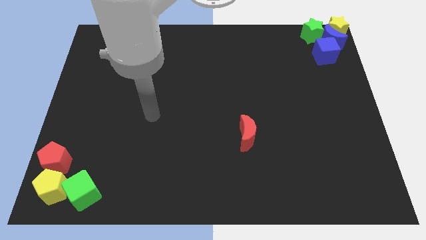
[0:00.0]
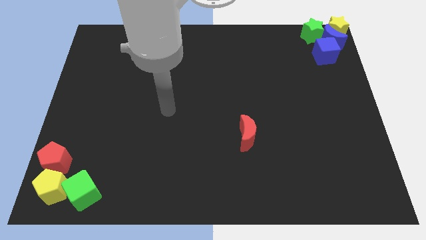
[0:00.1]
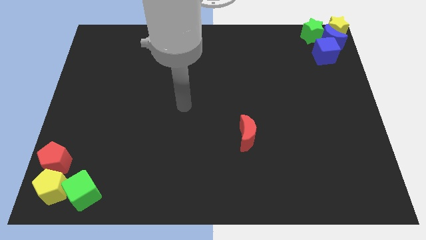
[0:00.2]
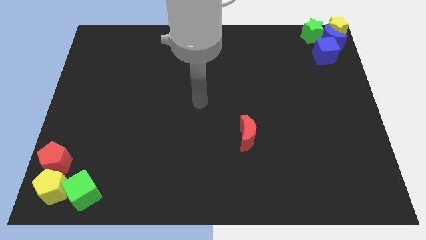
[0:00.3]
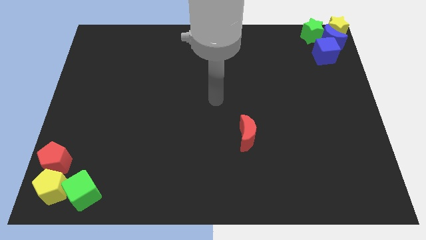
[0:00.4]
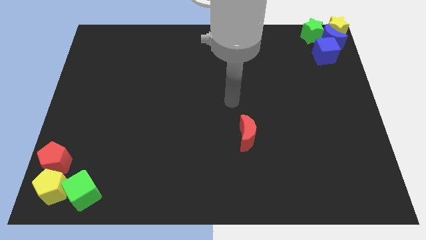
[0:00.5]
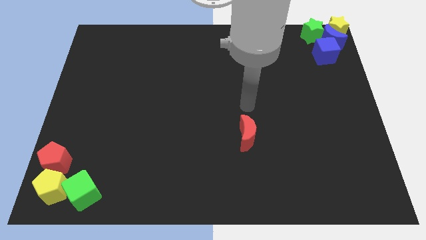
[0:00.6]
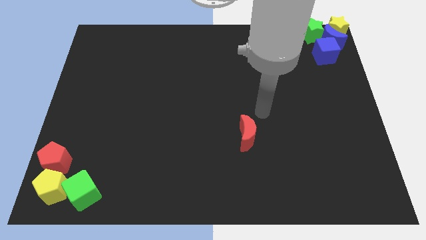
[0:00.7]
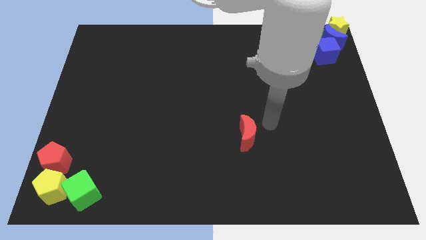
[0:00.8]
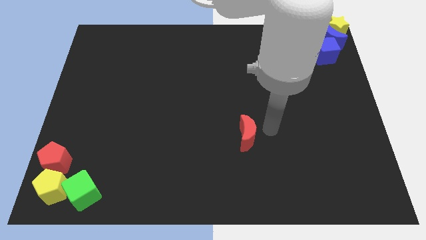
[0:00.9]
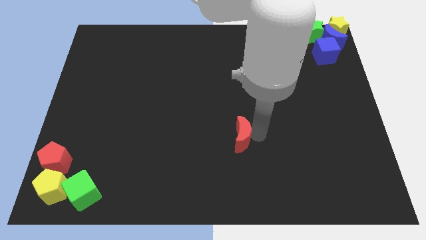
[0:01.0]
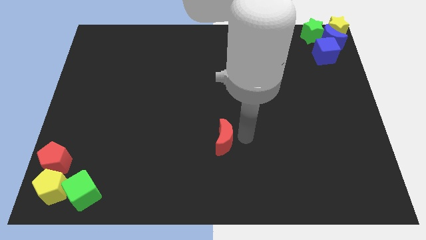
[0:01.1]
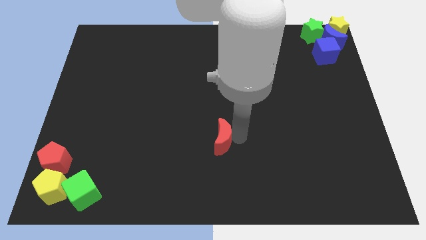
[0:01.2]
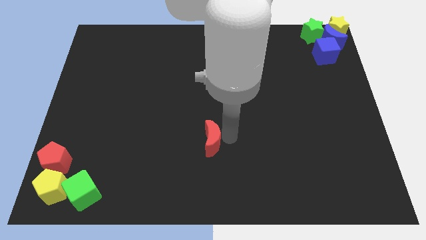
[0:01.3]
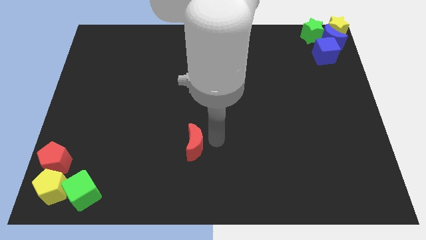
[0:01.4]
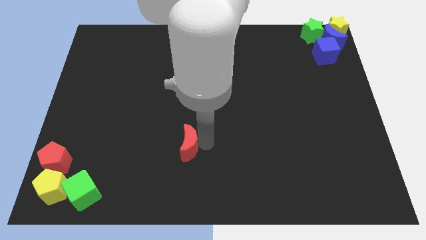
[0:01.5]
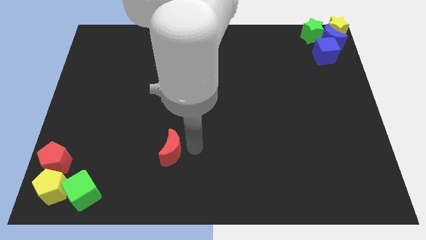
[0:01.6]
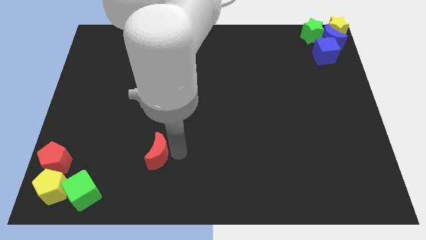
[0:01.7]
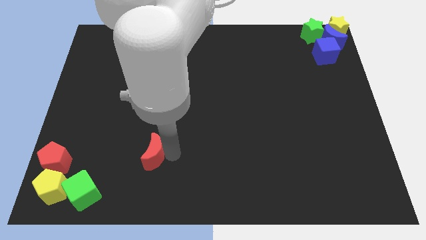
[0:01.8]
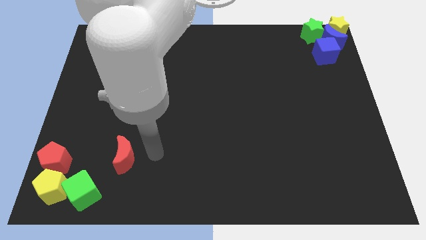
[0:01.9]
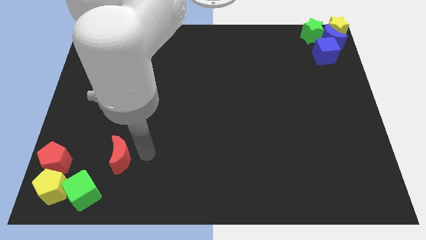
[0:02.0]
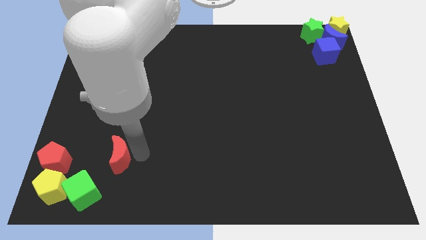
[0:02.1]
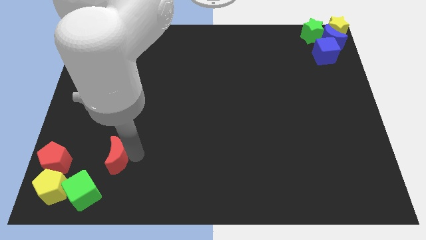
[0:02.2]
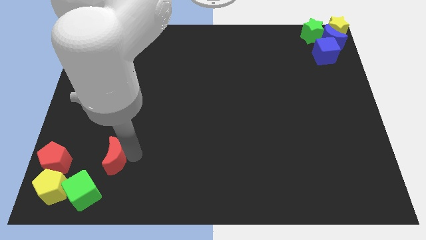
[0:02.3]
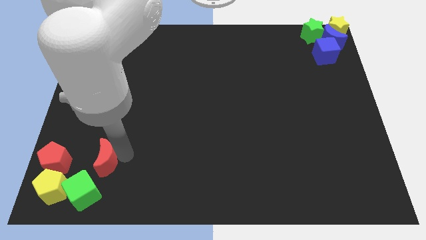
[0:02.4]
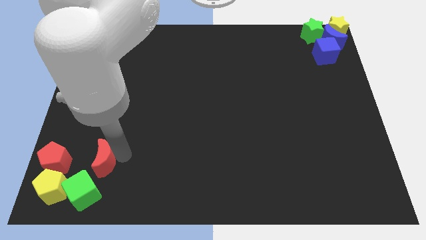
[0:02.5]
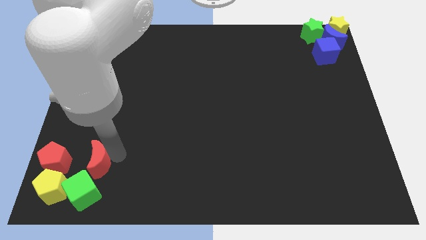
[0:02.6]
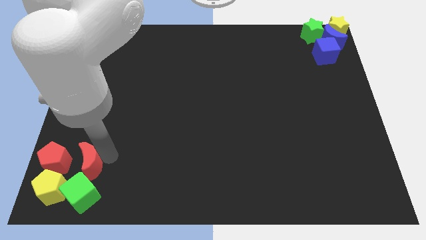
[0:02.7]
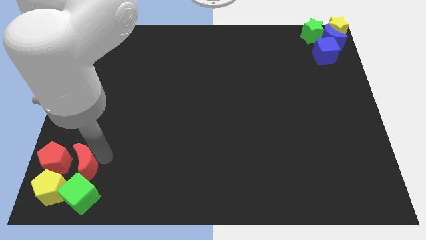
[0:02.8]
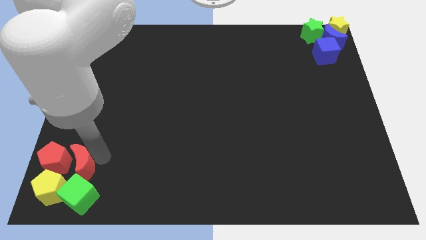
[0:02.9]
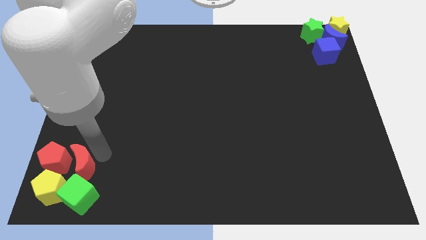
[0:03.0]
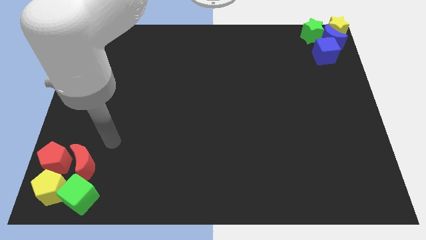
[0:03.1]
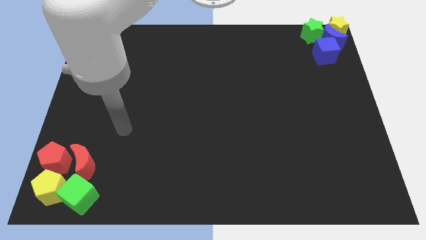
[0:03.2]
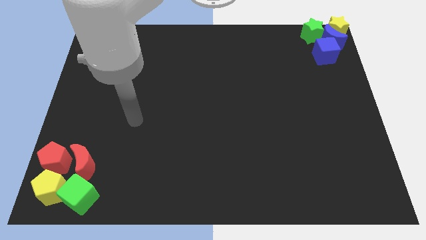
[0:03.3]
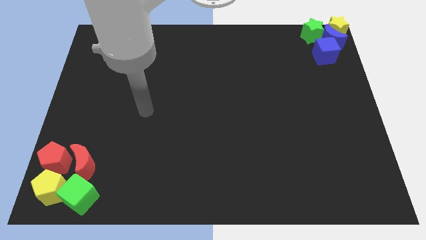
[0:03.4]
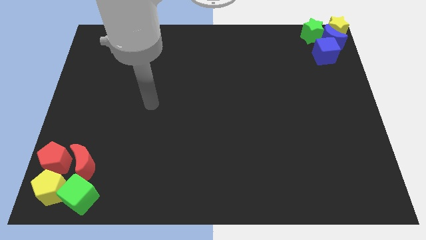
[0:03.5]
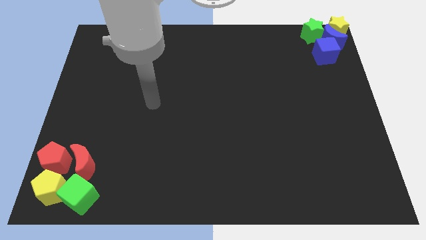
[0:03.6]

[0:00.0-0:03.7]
move the red moon above to green cube

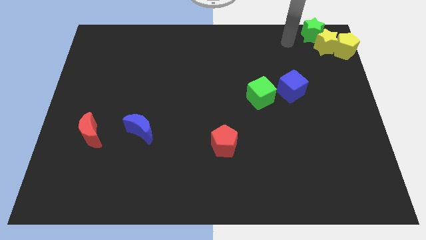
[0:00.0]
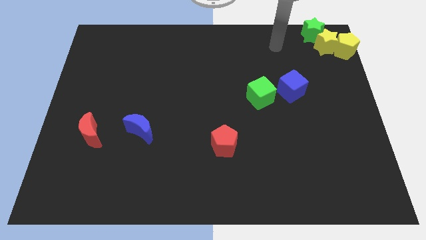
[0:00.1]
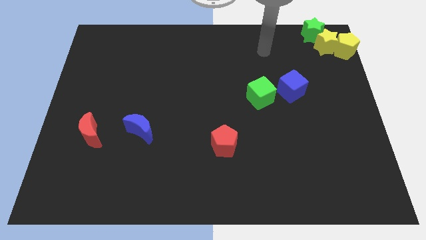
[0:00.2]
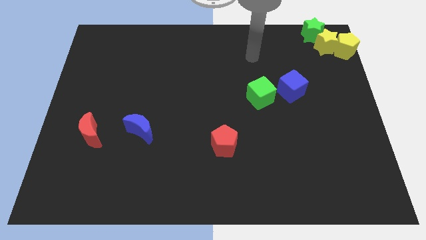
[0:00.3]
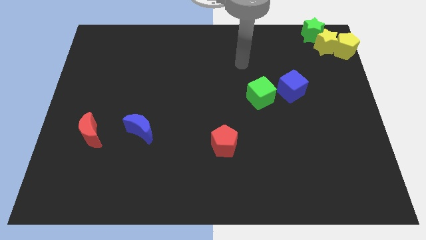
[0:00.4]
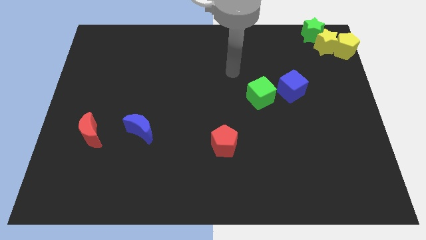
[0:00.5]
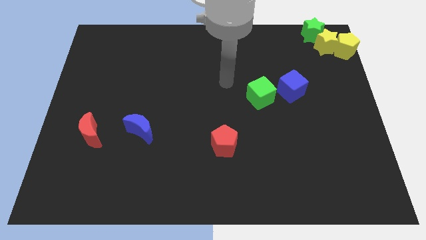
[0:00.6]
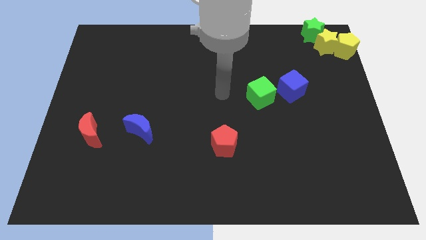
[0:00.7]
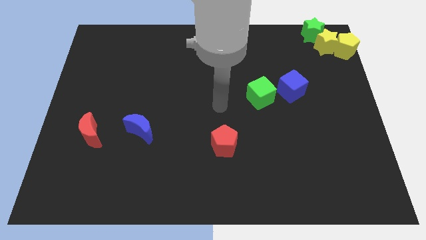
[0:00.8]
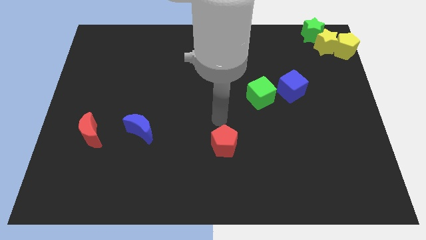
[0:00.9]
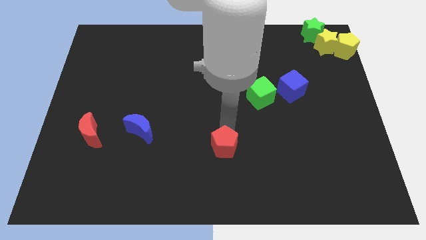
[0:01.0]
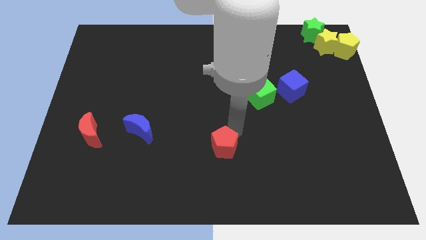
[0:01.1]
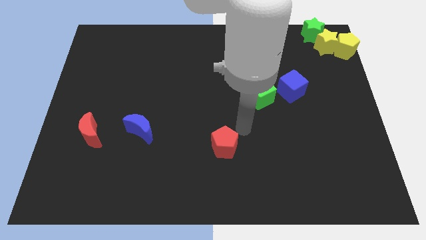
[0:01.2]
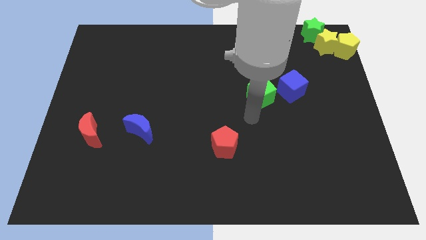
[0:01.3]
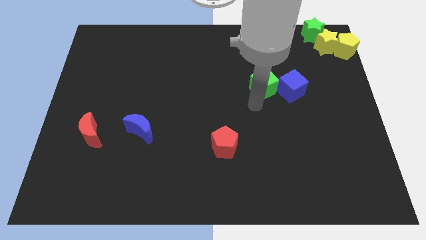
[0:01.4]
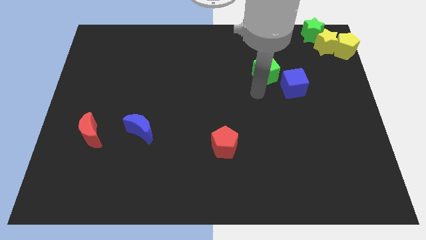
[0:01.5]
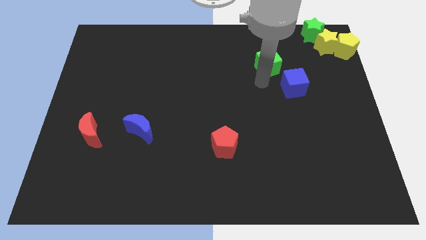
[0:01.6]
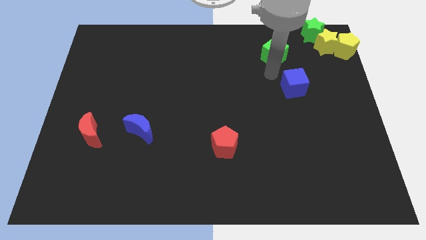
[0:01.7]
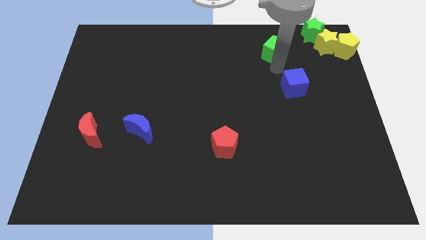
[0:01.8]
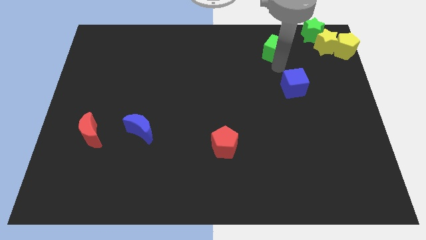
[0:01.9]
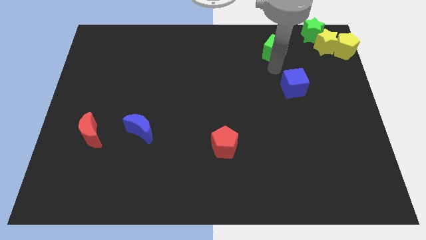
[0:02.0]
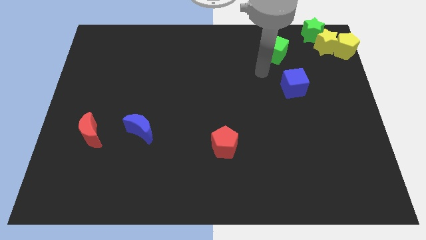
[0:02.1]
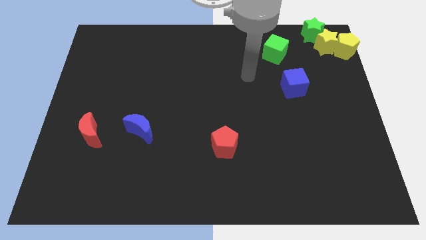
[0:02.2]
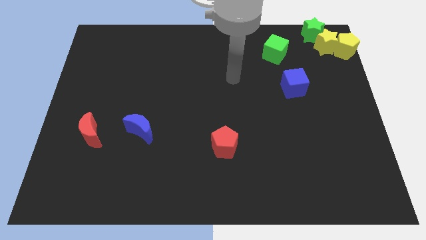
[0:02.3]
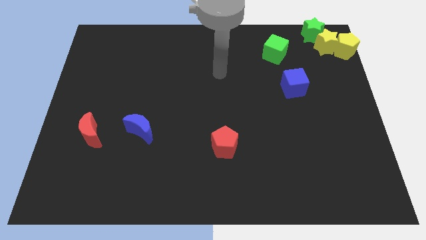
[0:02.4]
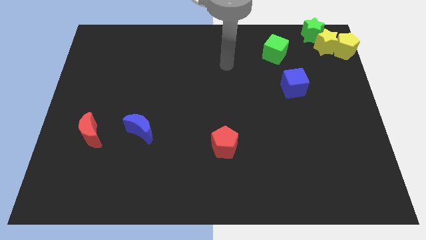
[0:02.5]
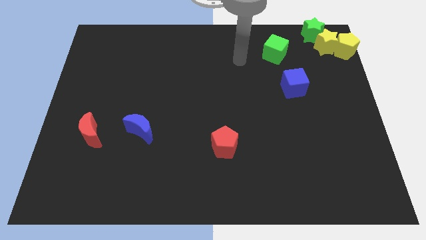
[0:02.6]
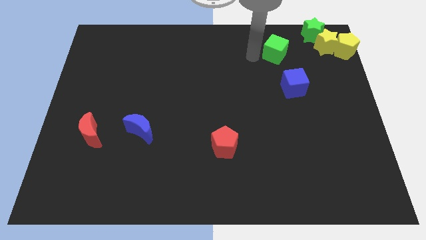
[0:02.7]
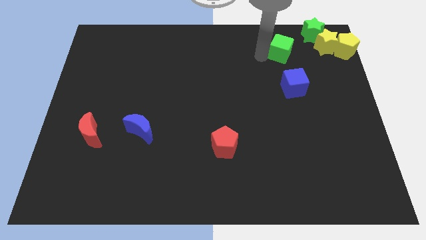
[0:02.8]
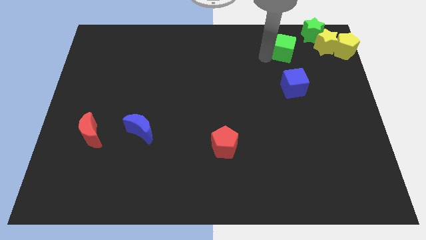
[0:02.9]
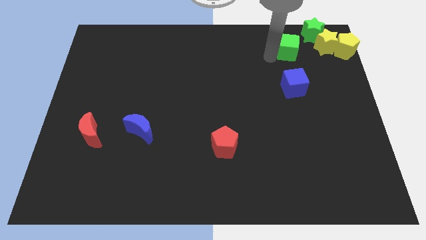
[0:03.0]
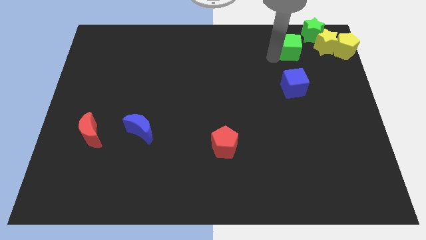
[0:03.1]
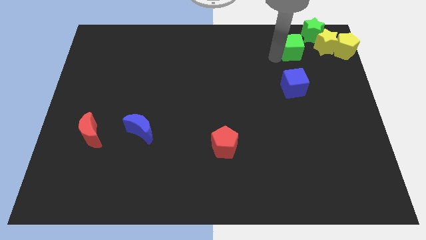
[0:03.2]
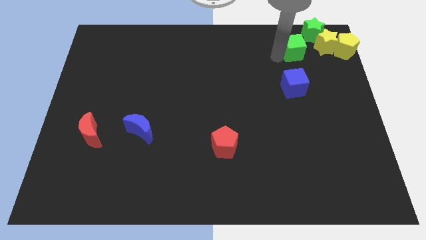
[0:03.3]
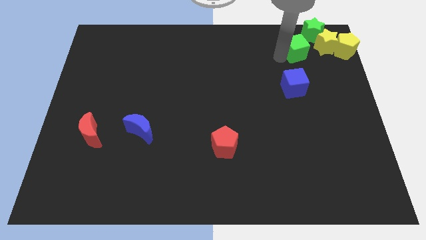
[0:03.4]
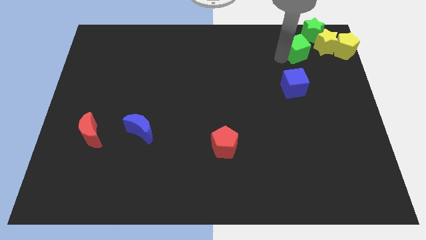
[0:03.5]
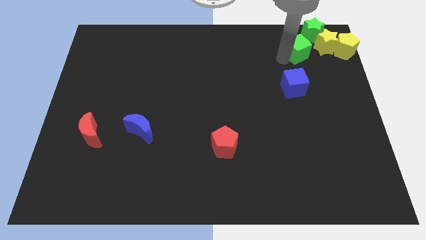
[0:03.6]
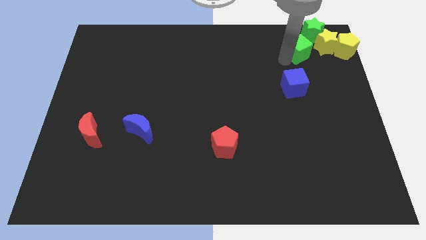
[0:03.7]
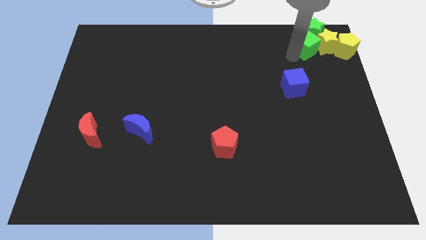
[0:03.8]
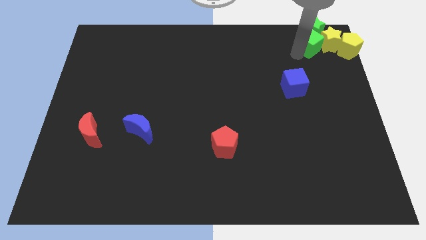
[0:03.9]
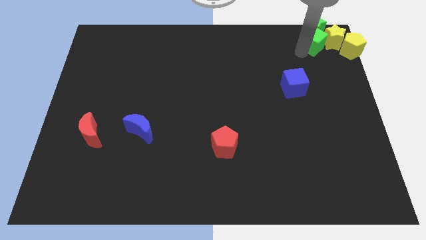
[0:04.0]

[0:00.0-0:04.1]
move the green cube below the green star

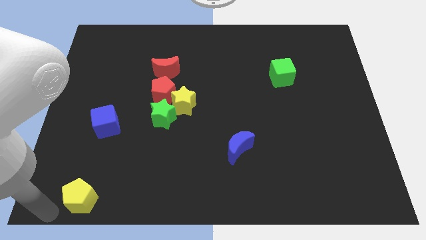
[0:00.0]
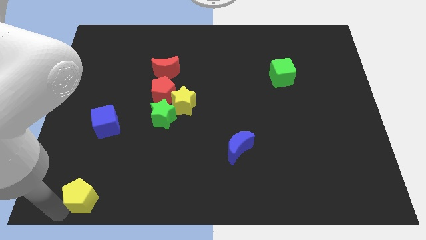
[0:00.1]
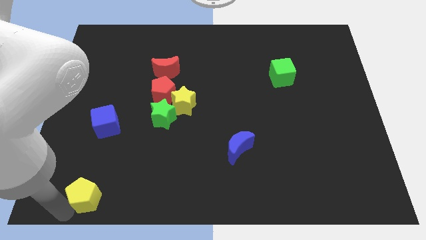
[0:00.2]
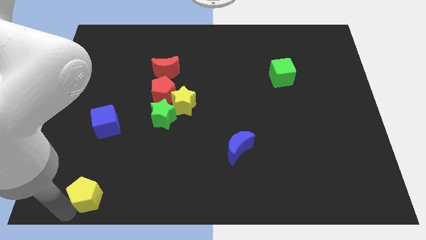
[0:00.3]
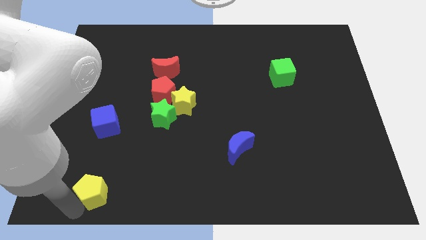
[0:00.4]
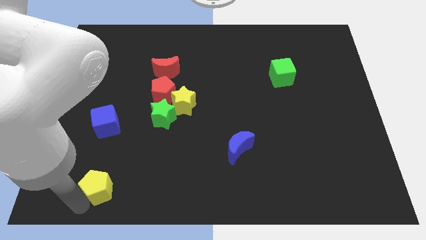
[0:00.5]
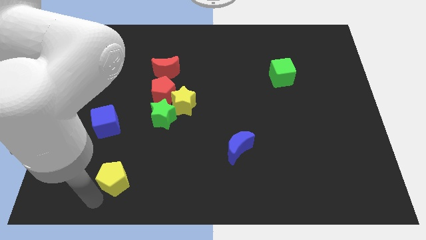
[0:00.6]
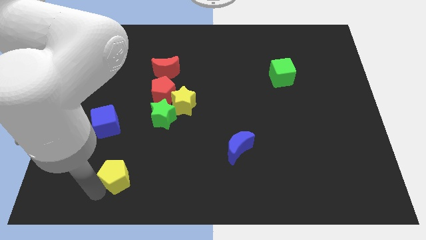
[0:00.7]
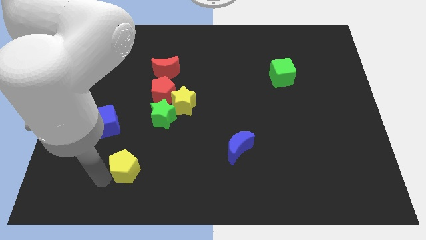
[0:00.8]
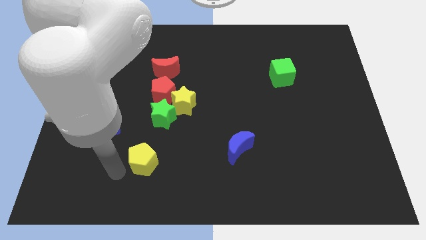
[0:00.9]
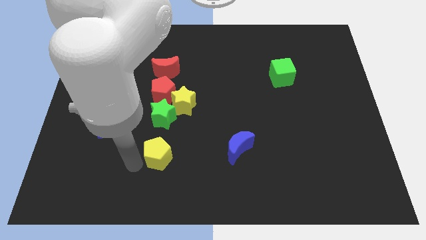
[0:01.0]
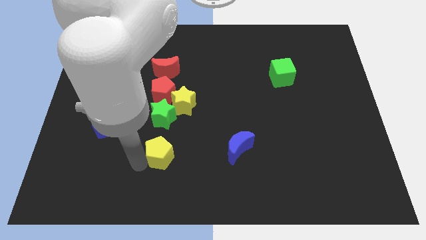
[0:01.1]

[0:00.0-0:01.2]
move the yellow pentagon vertically below the green star
